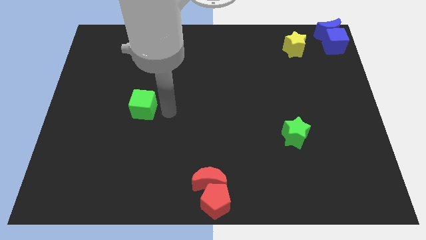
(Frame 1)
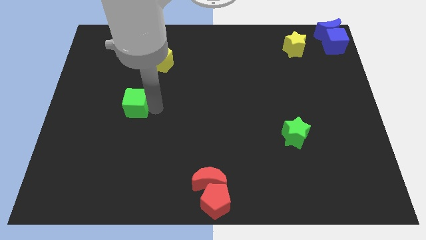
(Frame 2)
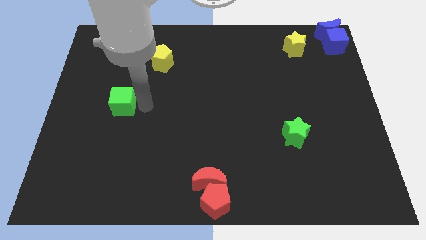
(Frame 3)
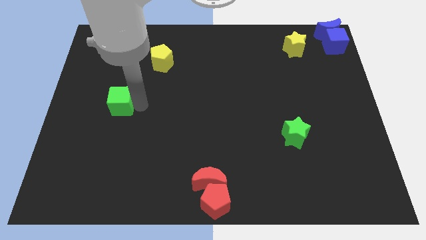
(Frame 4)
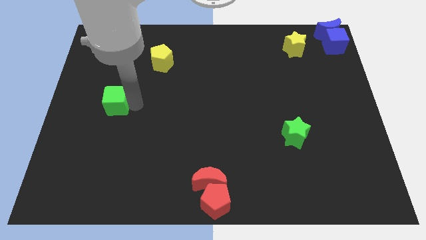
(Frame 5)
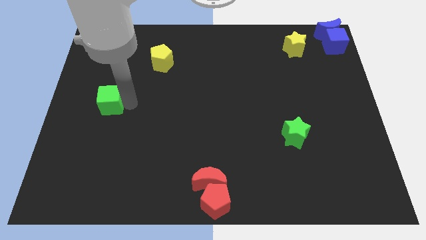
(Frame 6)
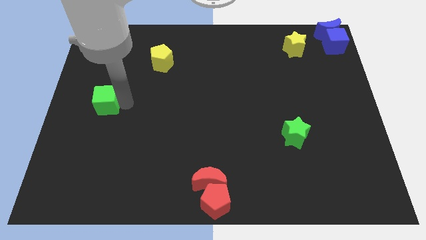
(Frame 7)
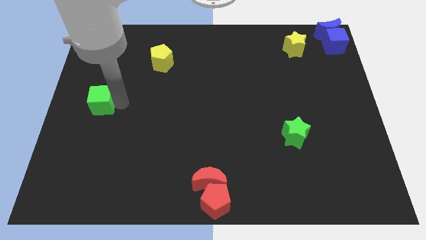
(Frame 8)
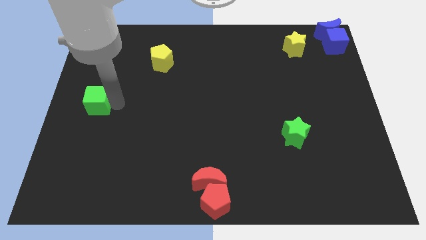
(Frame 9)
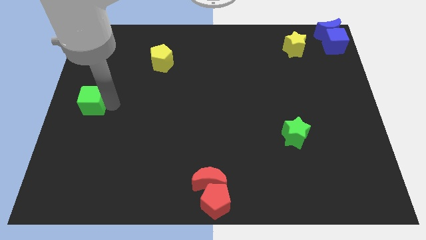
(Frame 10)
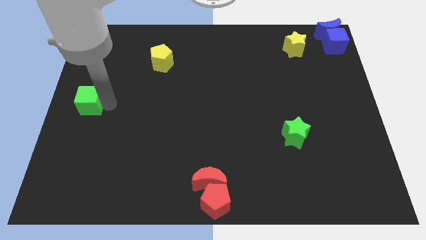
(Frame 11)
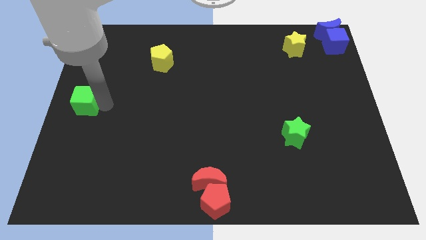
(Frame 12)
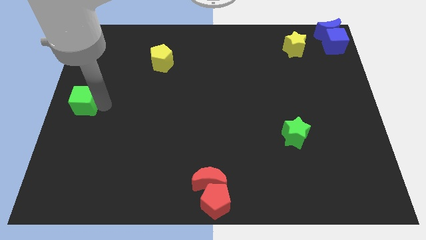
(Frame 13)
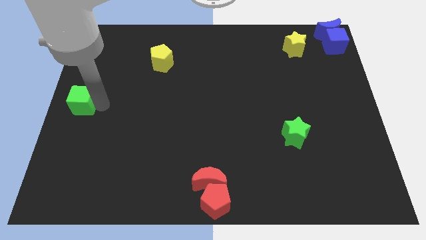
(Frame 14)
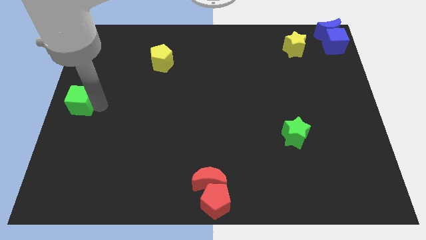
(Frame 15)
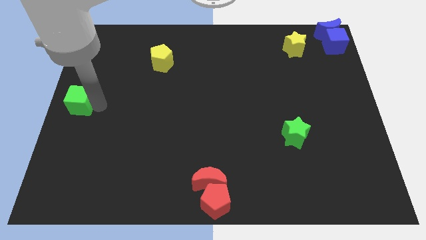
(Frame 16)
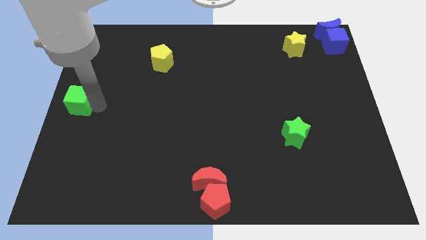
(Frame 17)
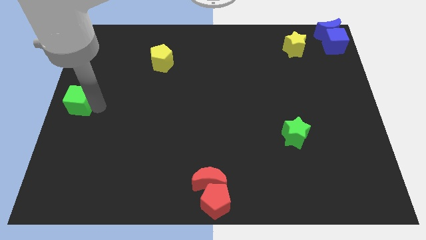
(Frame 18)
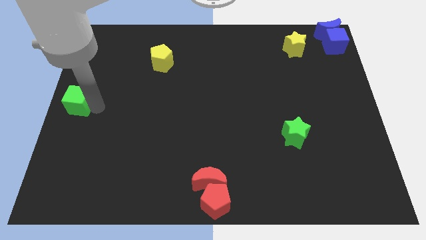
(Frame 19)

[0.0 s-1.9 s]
move the green cube to the left center of the board

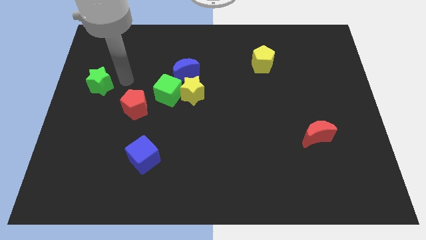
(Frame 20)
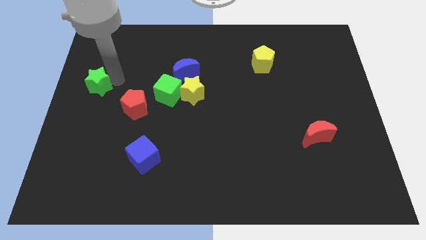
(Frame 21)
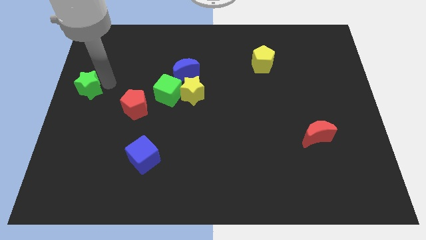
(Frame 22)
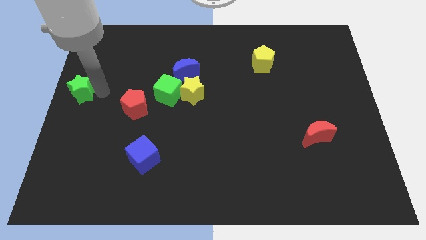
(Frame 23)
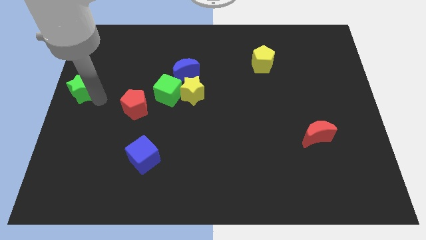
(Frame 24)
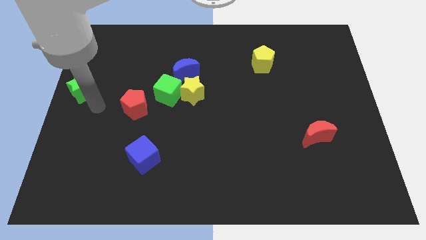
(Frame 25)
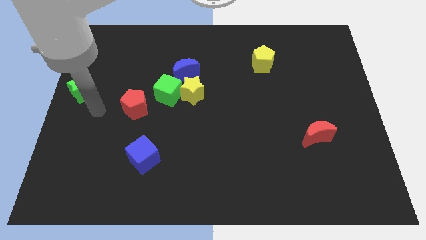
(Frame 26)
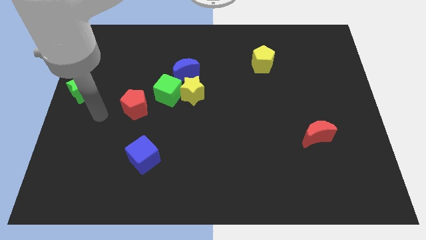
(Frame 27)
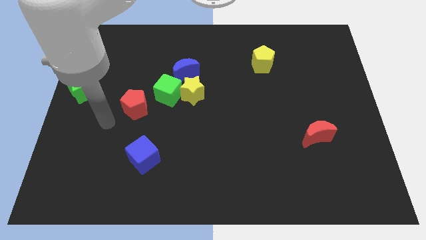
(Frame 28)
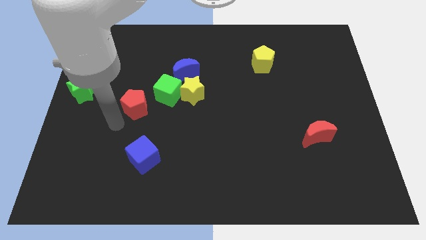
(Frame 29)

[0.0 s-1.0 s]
push the green star slightly to the left

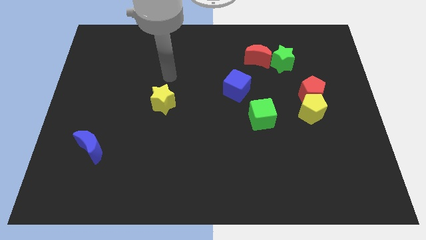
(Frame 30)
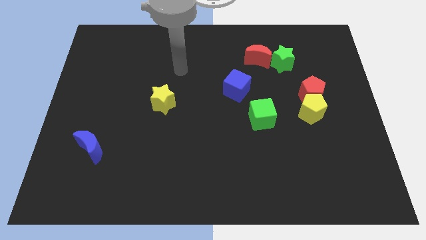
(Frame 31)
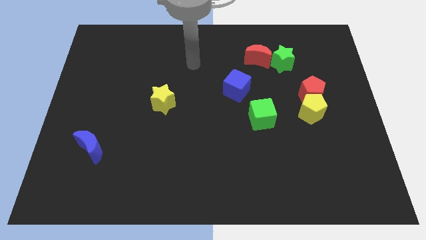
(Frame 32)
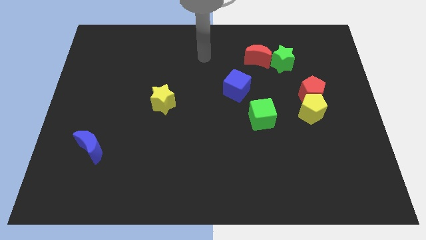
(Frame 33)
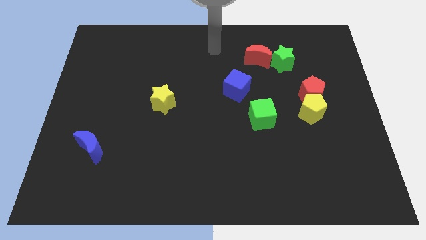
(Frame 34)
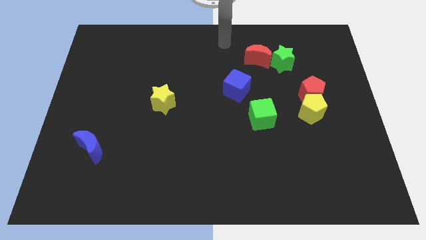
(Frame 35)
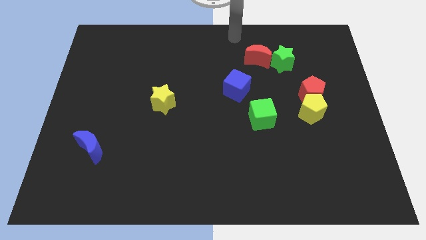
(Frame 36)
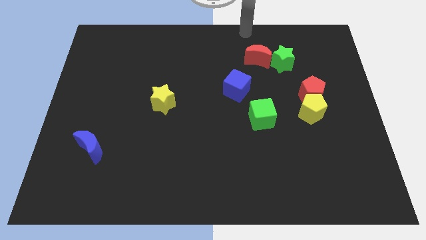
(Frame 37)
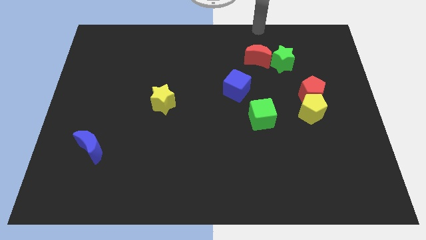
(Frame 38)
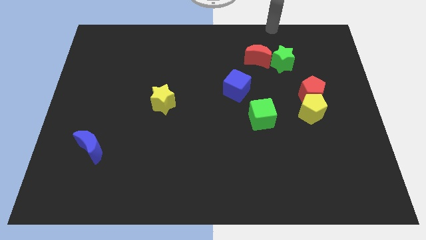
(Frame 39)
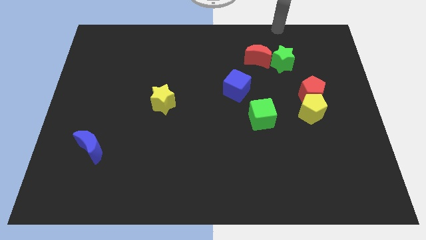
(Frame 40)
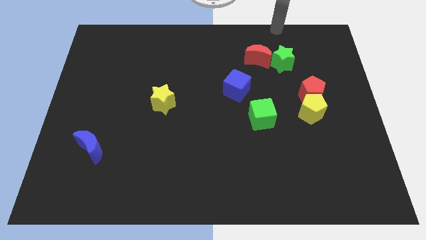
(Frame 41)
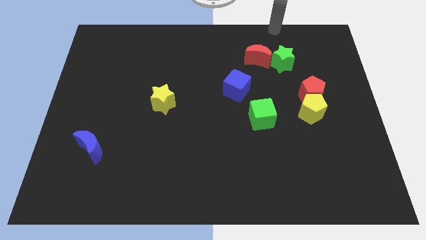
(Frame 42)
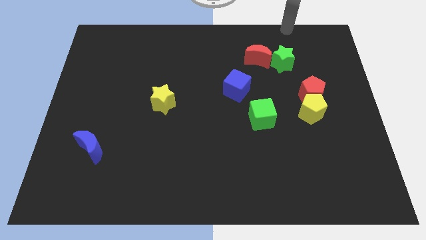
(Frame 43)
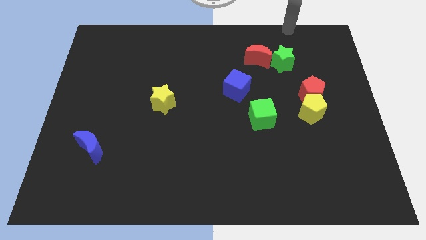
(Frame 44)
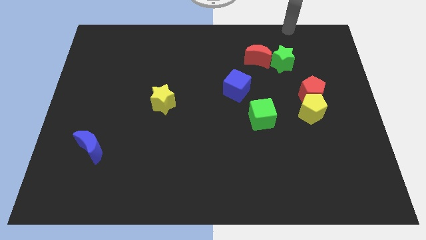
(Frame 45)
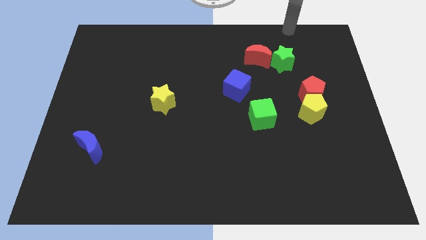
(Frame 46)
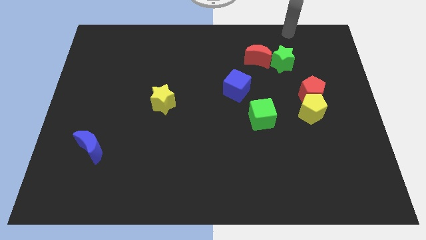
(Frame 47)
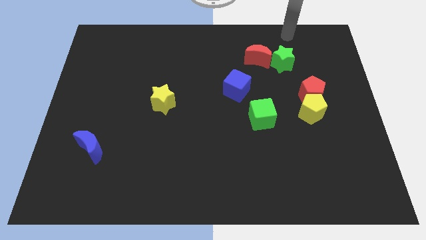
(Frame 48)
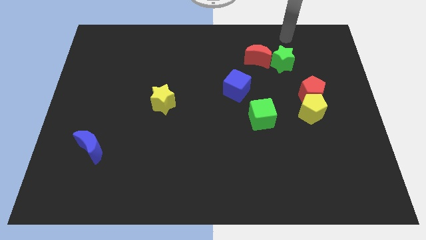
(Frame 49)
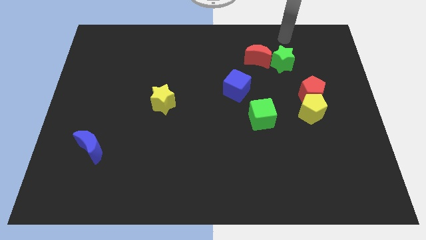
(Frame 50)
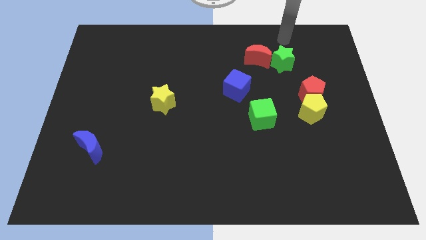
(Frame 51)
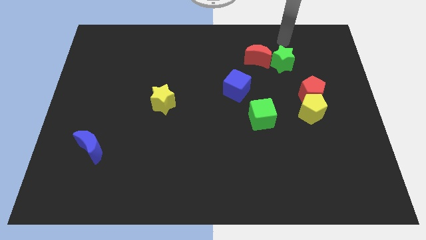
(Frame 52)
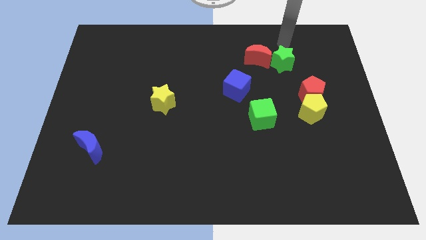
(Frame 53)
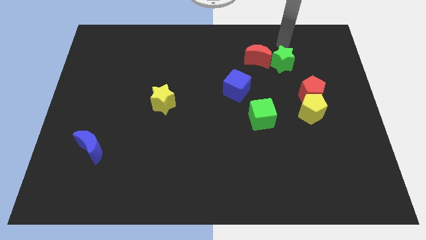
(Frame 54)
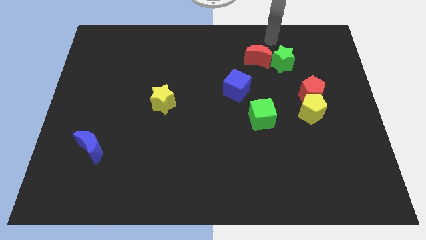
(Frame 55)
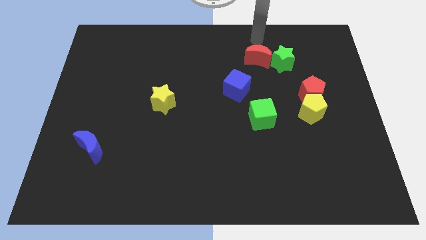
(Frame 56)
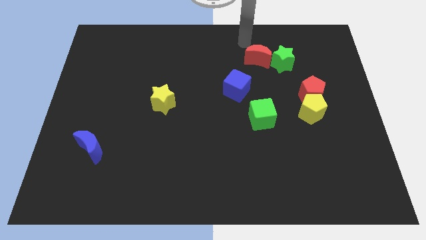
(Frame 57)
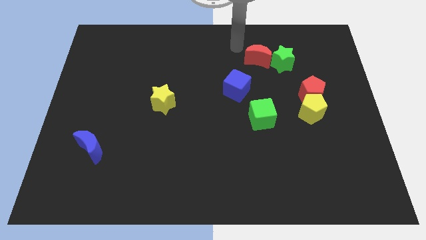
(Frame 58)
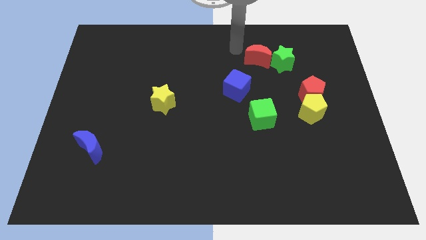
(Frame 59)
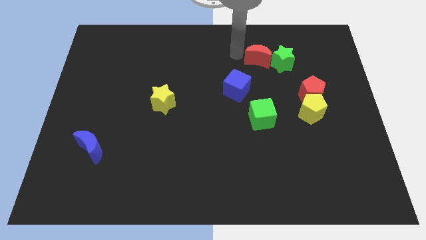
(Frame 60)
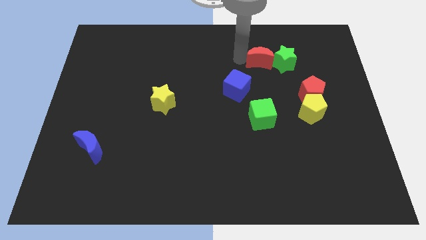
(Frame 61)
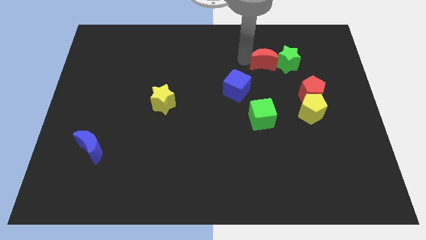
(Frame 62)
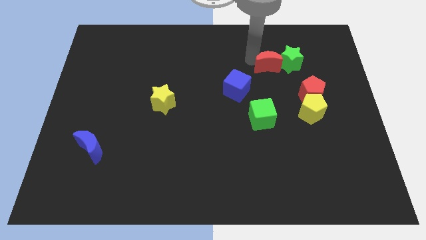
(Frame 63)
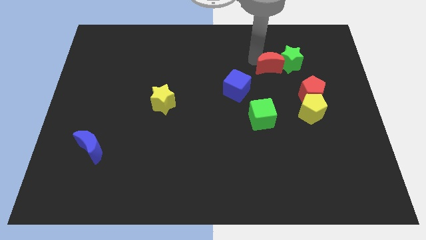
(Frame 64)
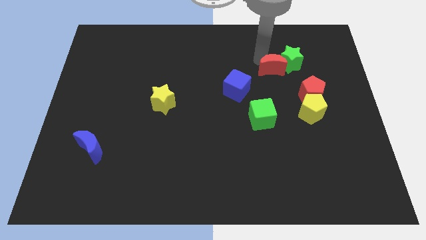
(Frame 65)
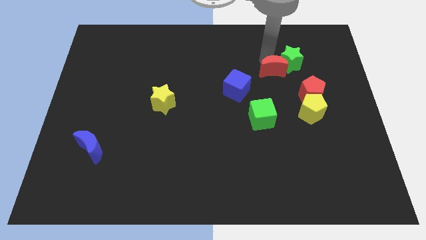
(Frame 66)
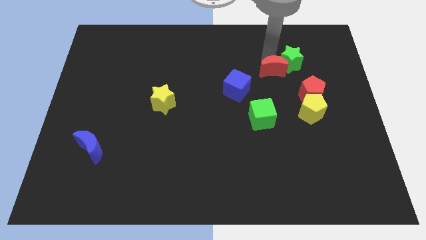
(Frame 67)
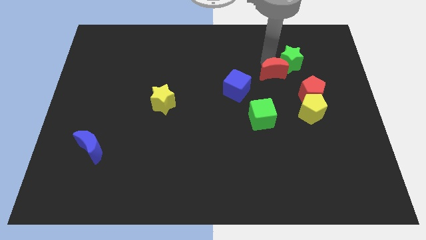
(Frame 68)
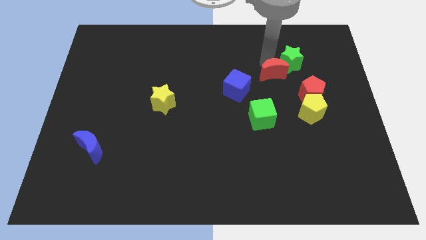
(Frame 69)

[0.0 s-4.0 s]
move the arm towards the red moon

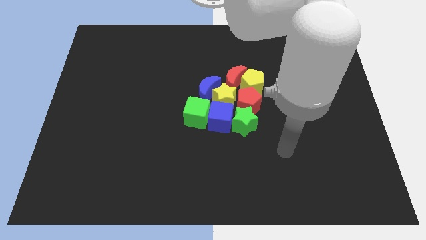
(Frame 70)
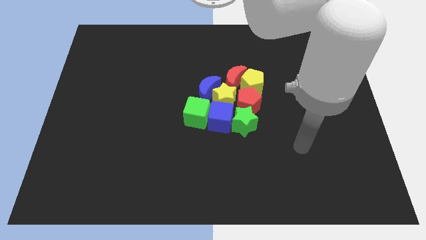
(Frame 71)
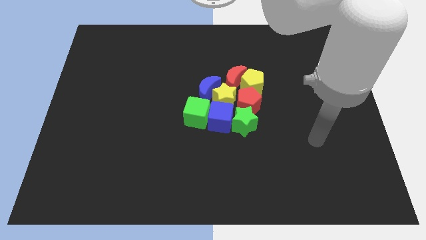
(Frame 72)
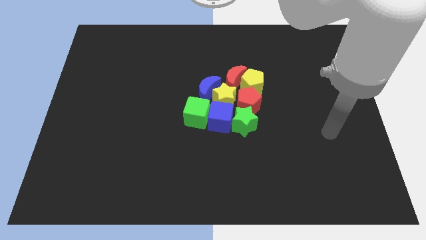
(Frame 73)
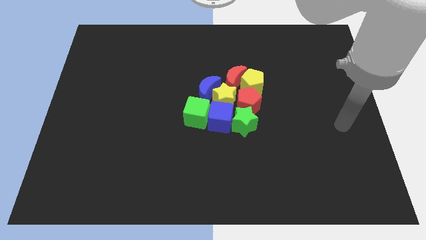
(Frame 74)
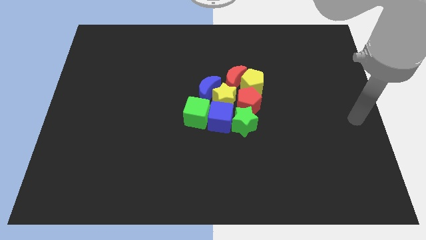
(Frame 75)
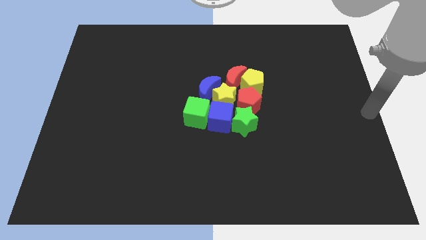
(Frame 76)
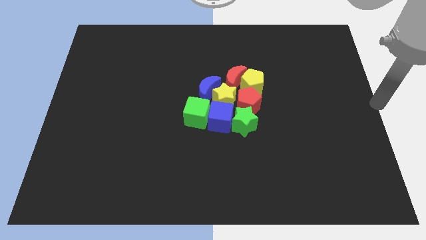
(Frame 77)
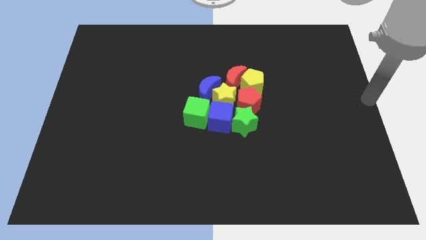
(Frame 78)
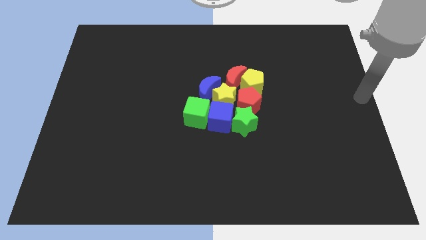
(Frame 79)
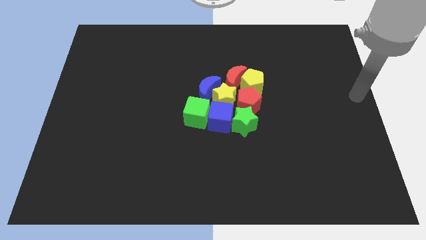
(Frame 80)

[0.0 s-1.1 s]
move your arm away from the group of blocks

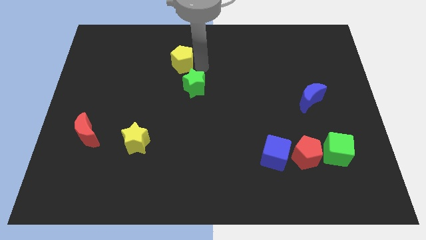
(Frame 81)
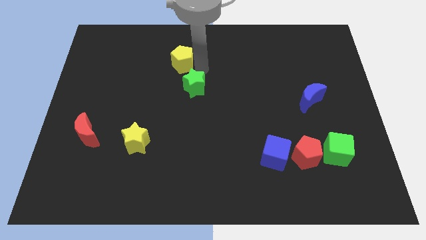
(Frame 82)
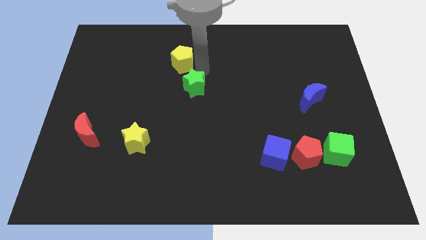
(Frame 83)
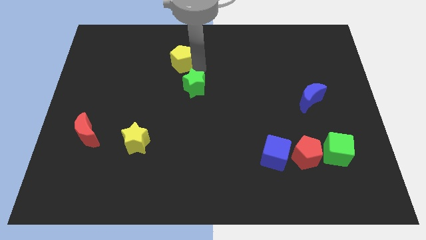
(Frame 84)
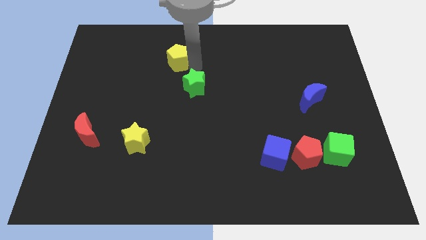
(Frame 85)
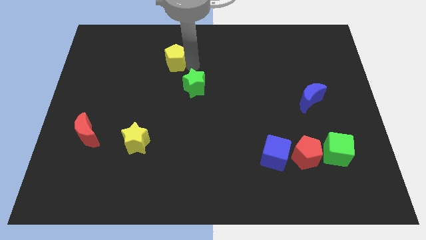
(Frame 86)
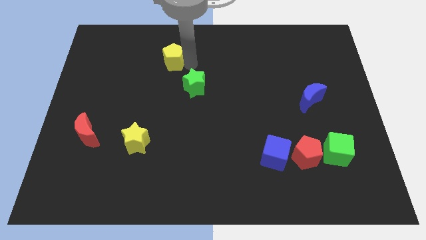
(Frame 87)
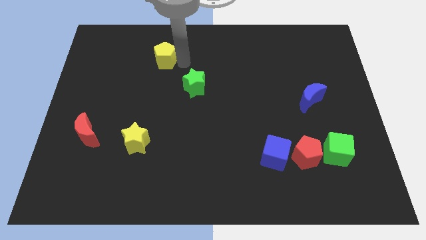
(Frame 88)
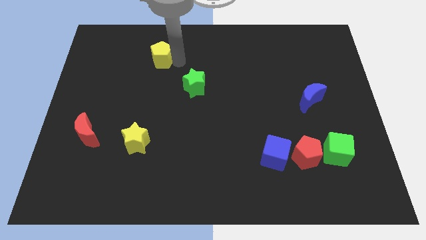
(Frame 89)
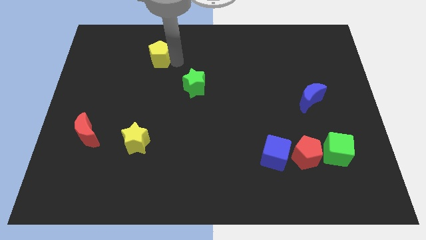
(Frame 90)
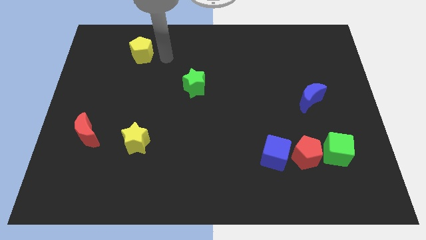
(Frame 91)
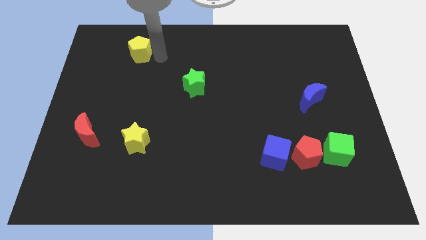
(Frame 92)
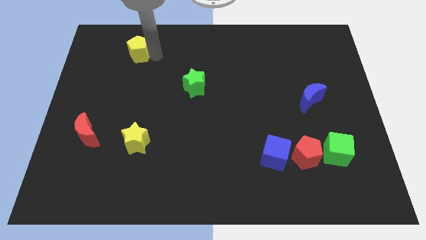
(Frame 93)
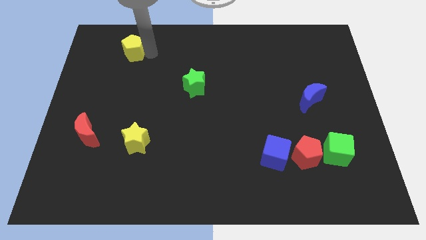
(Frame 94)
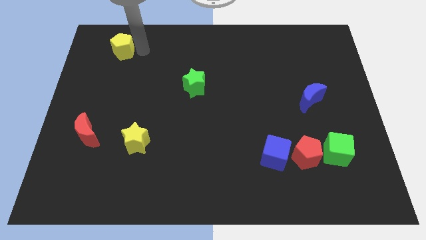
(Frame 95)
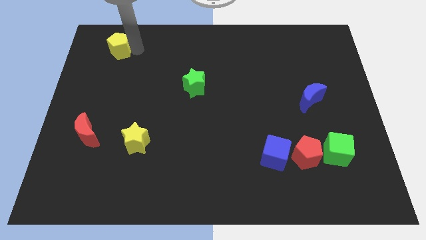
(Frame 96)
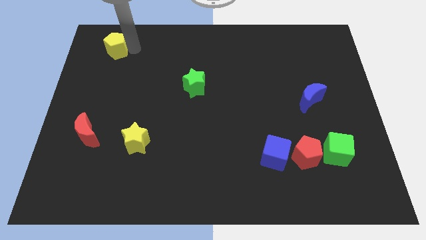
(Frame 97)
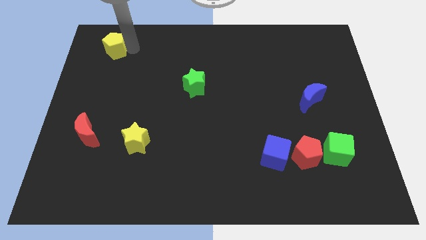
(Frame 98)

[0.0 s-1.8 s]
push the yellow pentagon slightly to the left
